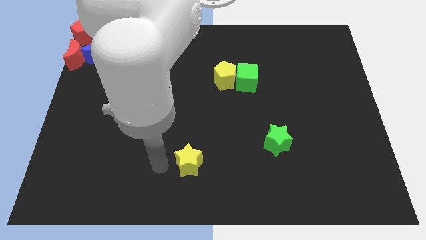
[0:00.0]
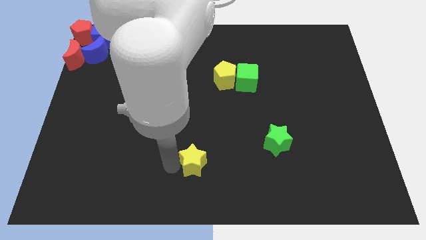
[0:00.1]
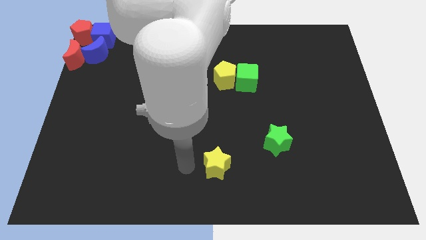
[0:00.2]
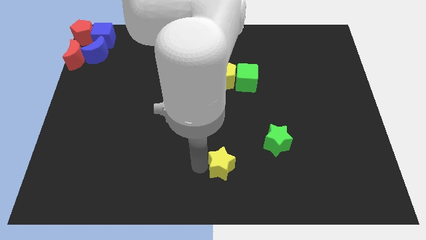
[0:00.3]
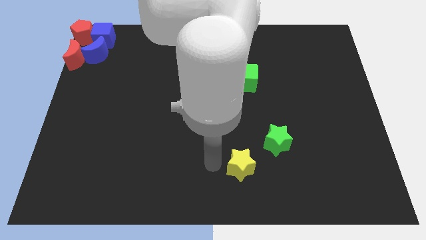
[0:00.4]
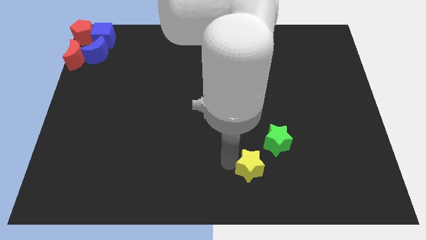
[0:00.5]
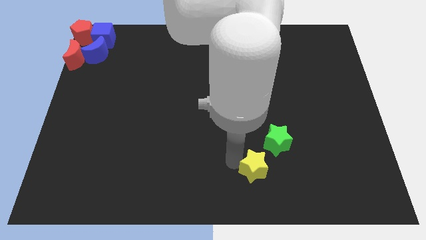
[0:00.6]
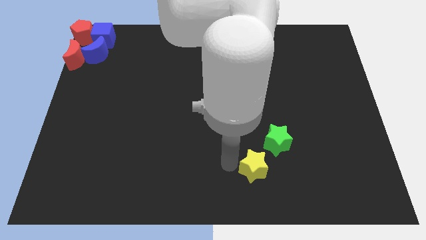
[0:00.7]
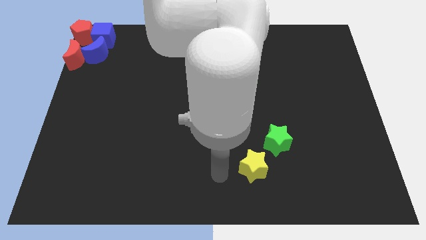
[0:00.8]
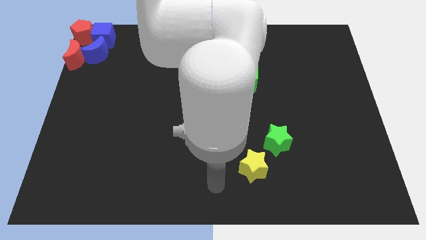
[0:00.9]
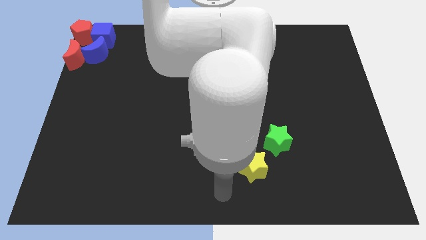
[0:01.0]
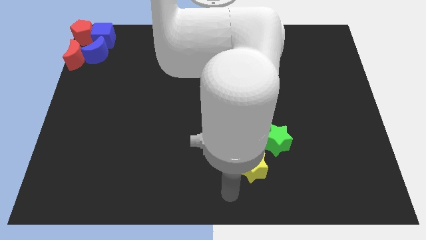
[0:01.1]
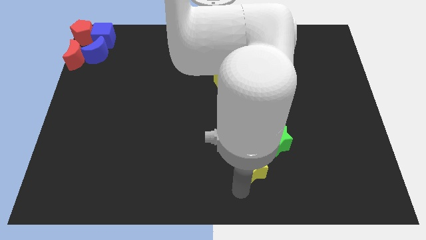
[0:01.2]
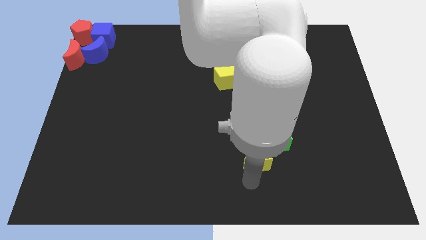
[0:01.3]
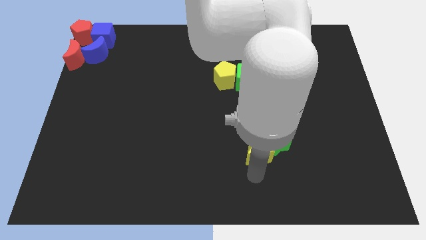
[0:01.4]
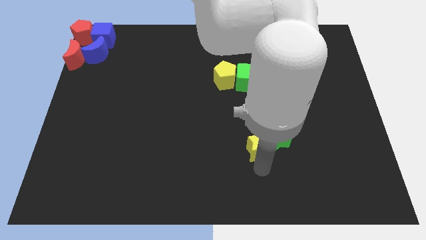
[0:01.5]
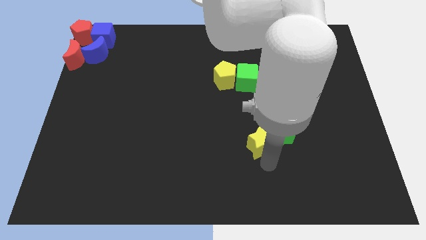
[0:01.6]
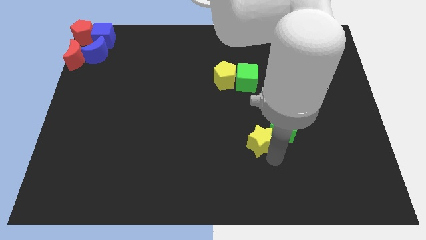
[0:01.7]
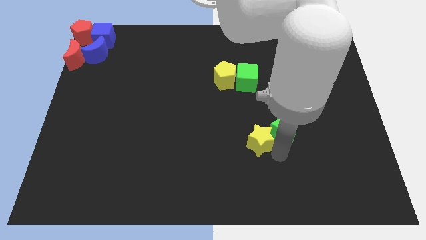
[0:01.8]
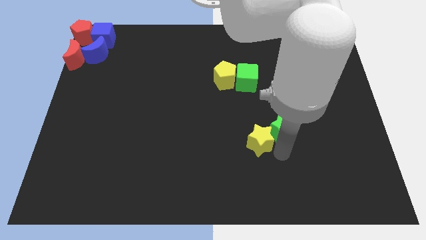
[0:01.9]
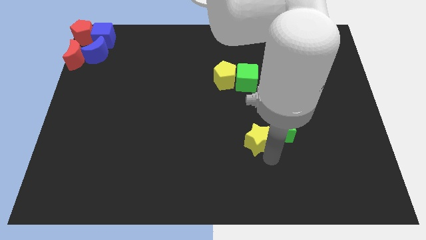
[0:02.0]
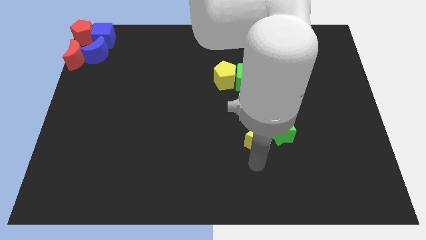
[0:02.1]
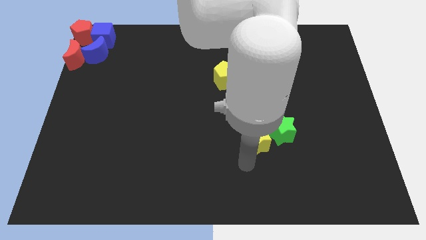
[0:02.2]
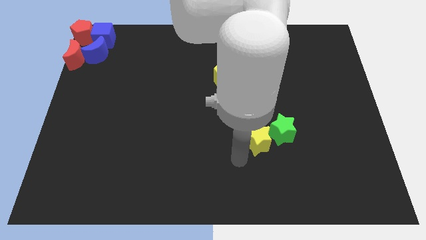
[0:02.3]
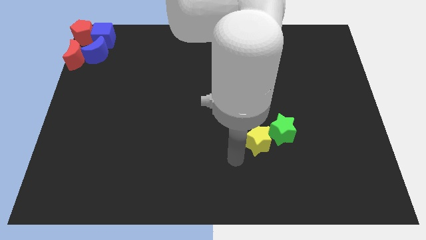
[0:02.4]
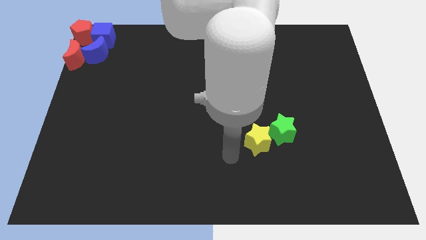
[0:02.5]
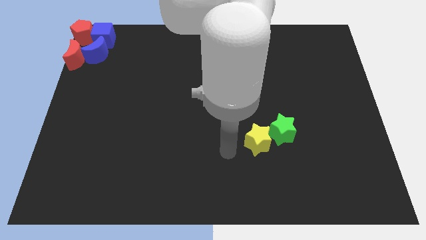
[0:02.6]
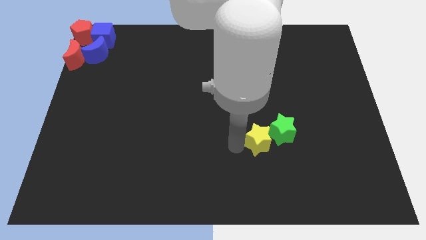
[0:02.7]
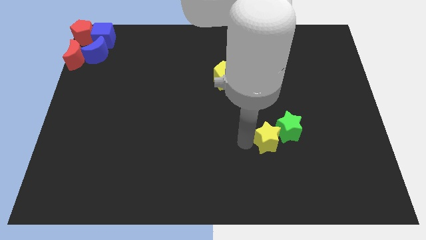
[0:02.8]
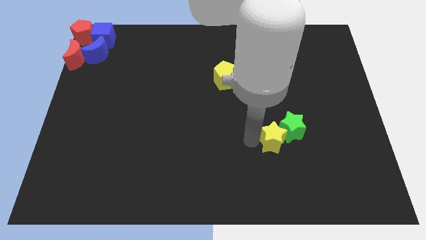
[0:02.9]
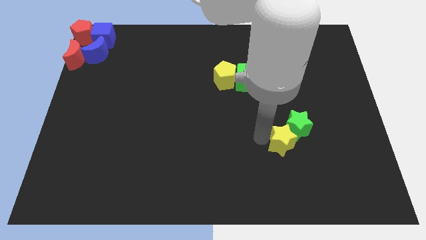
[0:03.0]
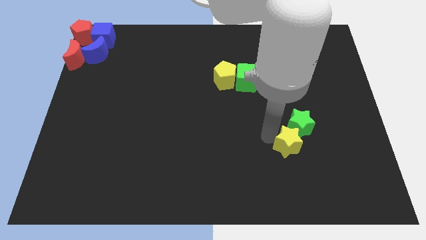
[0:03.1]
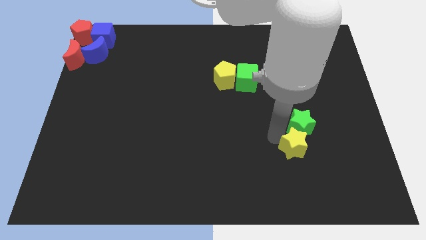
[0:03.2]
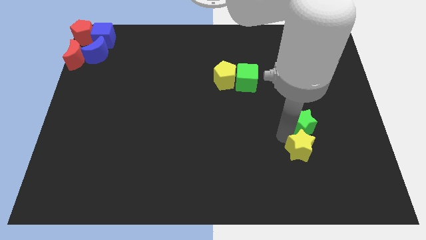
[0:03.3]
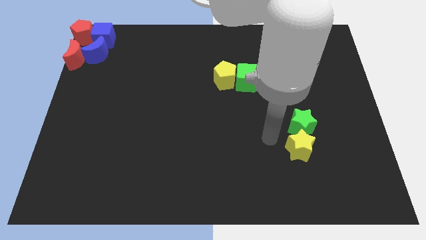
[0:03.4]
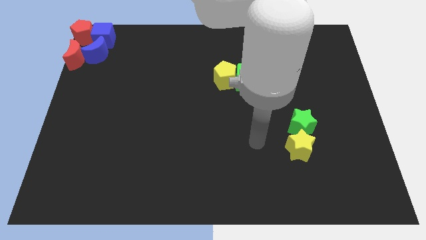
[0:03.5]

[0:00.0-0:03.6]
push the yellow star at the bottom of the green star

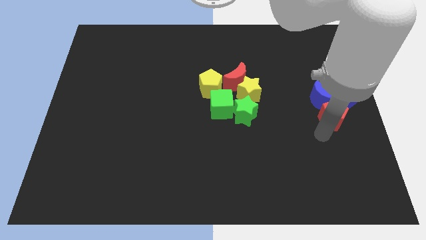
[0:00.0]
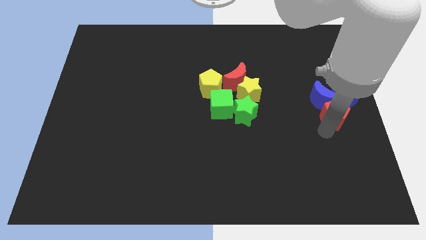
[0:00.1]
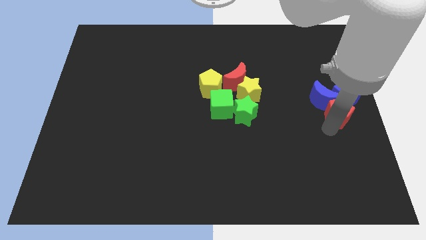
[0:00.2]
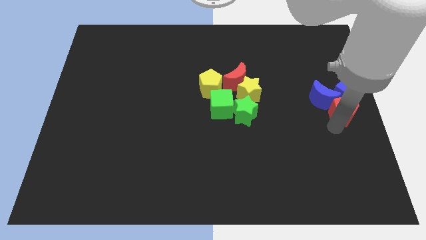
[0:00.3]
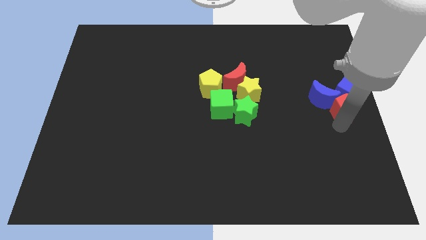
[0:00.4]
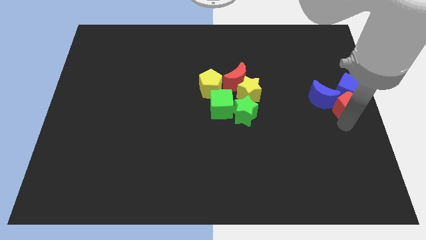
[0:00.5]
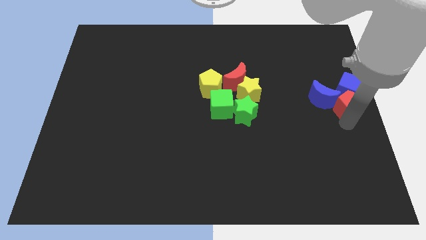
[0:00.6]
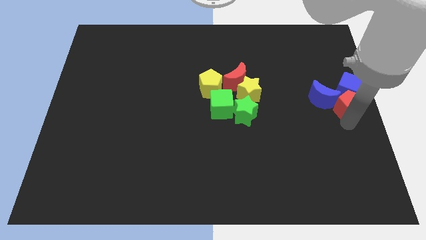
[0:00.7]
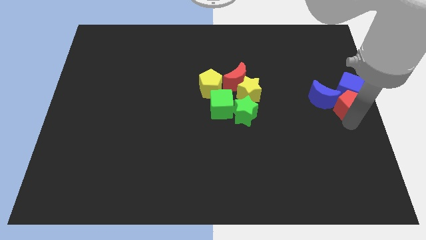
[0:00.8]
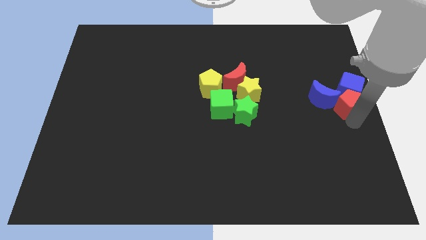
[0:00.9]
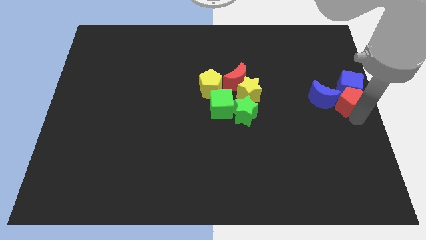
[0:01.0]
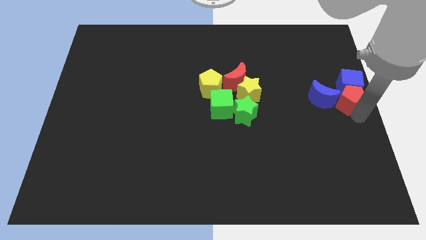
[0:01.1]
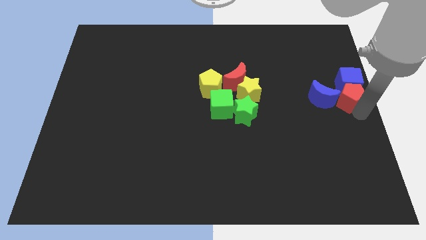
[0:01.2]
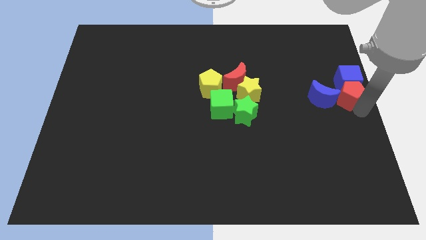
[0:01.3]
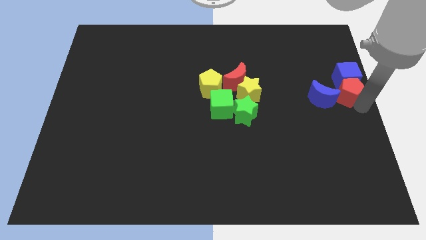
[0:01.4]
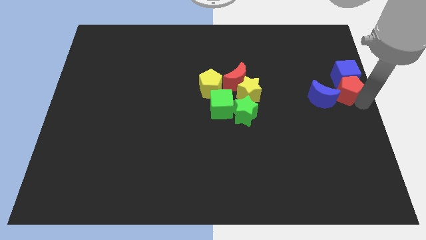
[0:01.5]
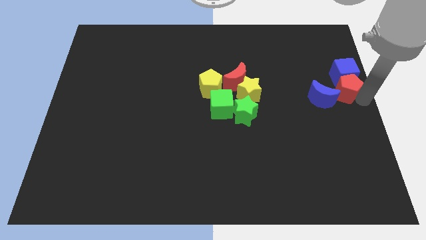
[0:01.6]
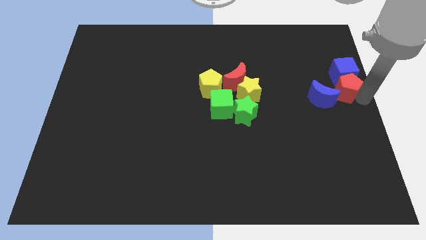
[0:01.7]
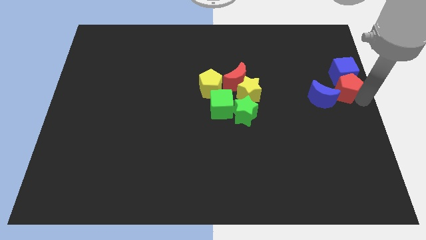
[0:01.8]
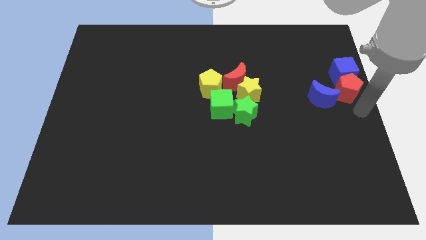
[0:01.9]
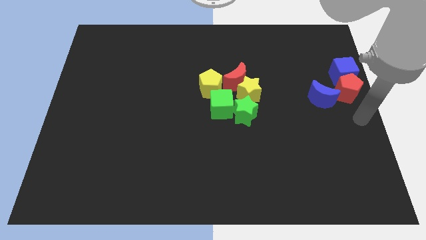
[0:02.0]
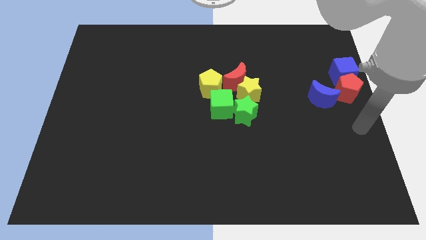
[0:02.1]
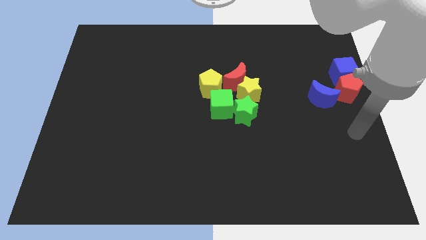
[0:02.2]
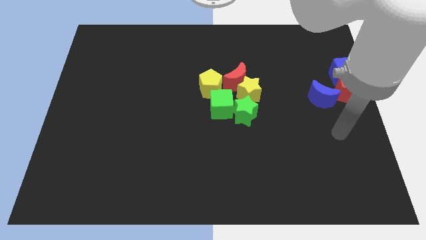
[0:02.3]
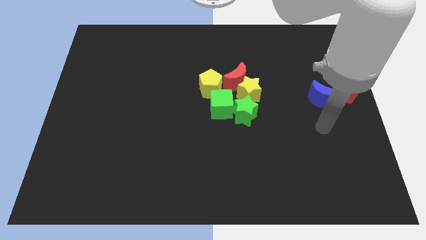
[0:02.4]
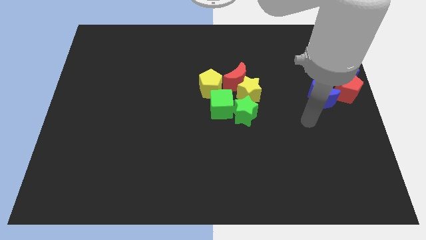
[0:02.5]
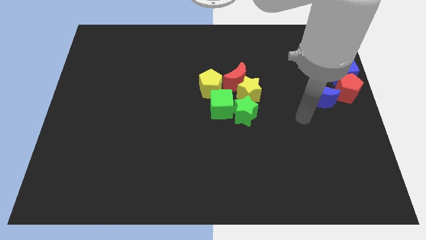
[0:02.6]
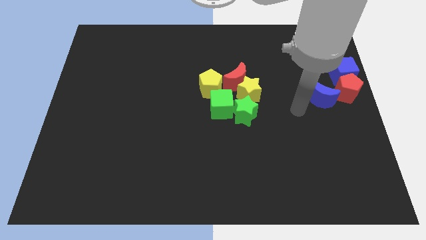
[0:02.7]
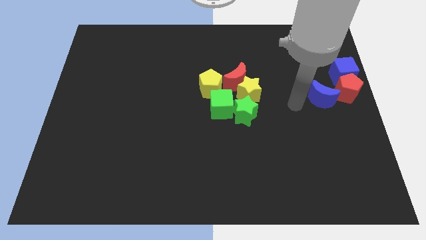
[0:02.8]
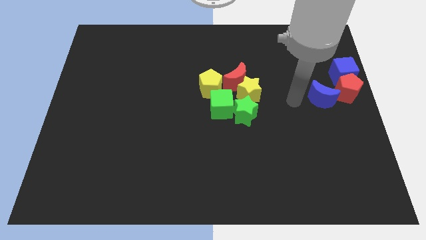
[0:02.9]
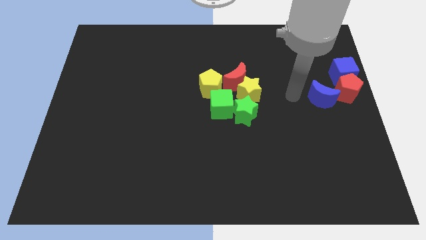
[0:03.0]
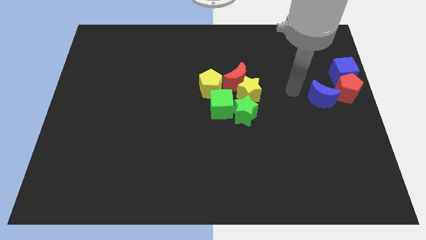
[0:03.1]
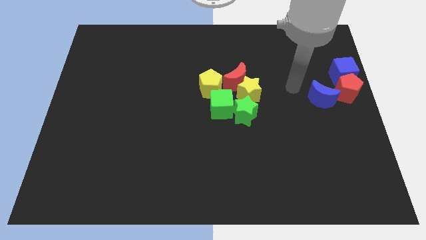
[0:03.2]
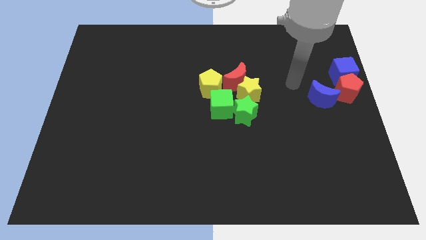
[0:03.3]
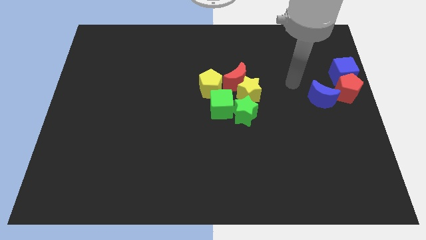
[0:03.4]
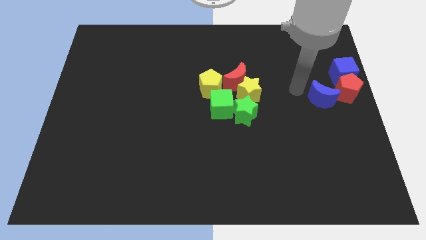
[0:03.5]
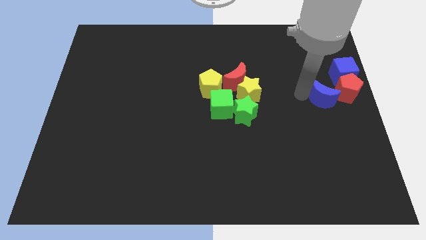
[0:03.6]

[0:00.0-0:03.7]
move the red pentagon towards the top right corner

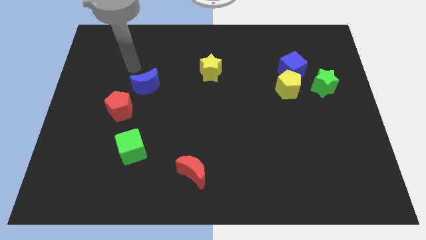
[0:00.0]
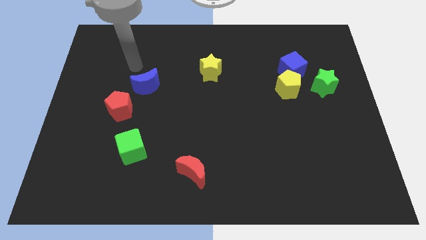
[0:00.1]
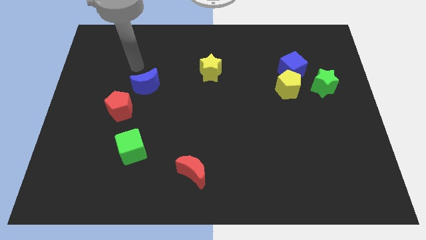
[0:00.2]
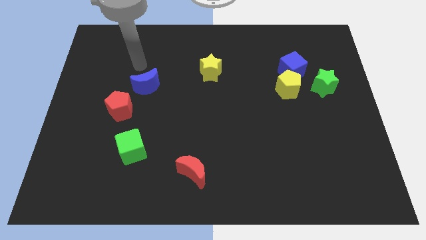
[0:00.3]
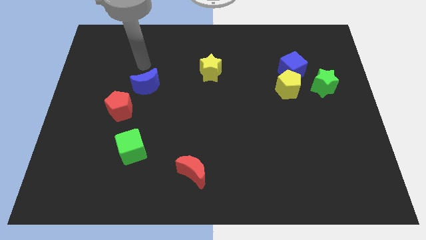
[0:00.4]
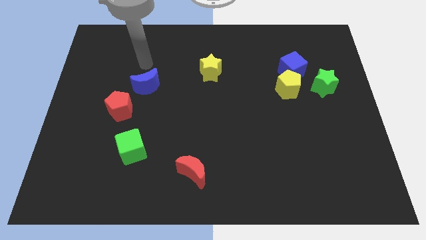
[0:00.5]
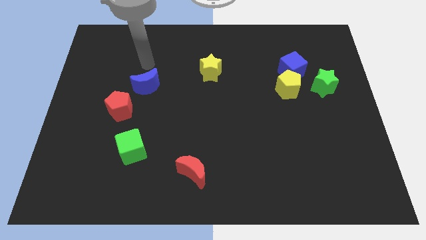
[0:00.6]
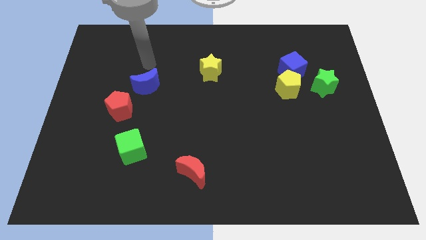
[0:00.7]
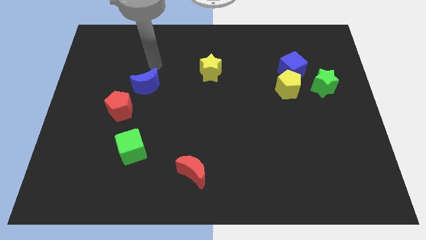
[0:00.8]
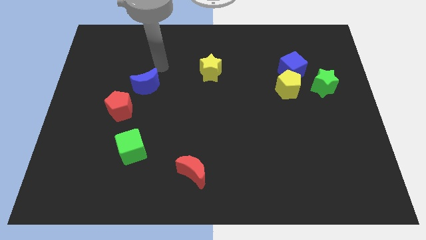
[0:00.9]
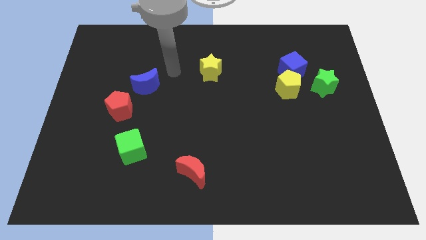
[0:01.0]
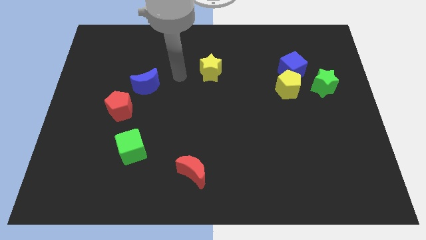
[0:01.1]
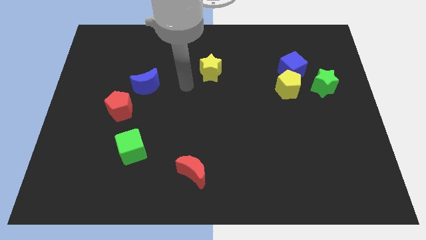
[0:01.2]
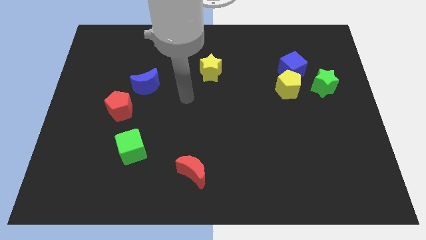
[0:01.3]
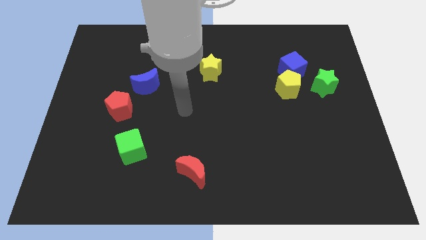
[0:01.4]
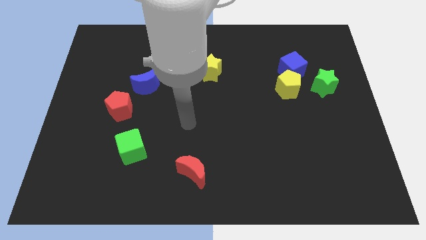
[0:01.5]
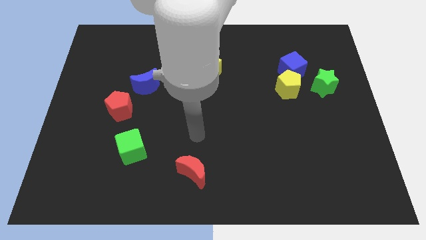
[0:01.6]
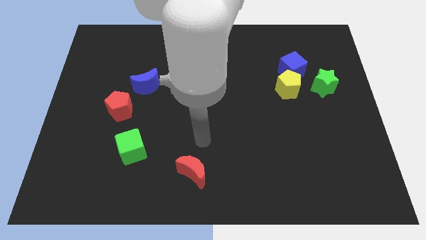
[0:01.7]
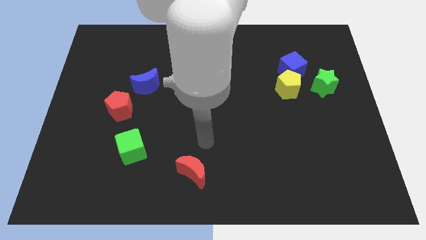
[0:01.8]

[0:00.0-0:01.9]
place the pointer at the top of the red moon
